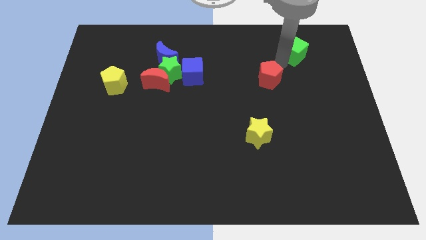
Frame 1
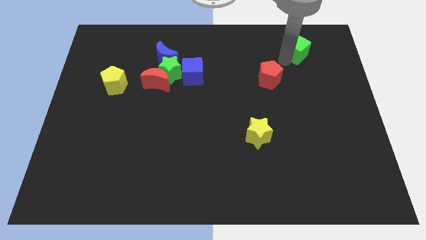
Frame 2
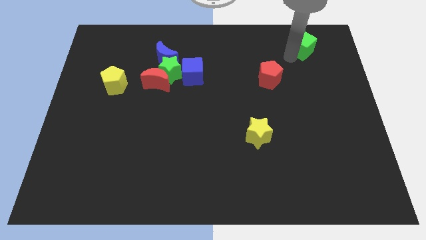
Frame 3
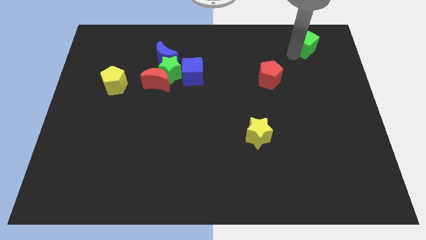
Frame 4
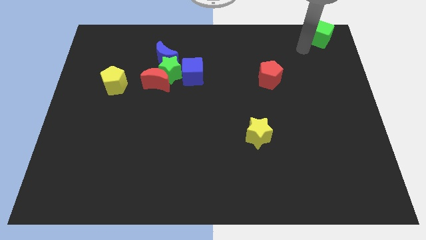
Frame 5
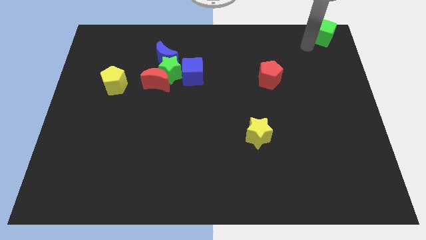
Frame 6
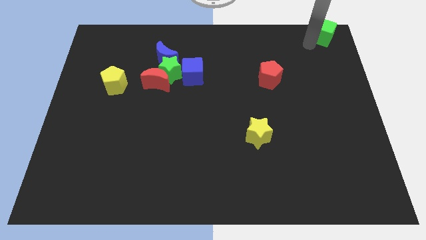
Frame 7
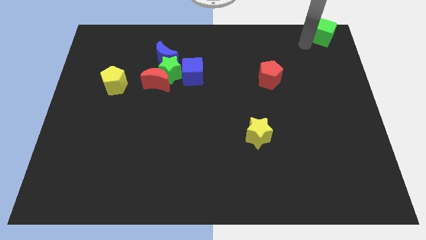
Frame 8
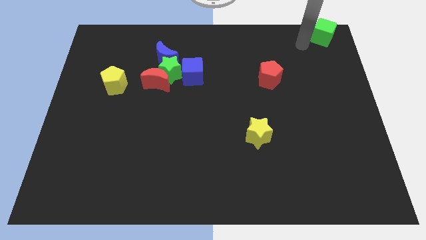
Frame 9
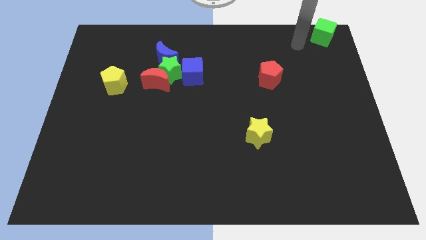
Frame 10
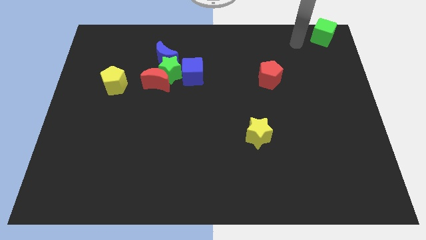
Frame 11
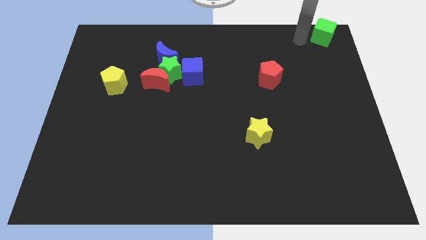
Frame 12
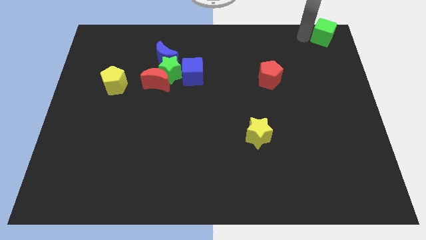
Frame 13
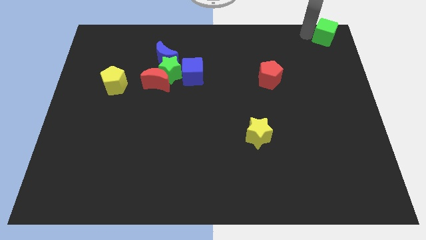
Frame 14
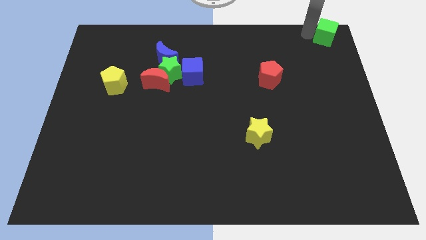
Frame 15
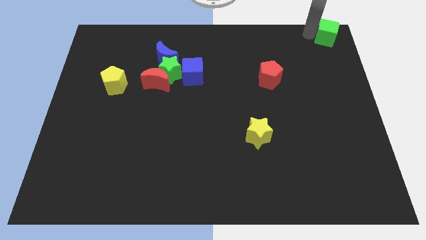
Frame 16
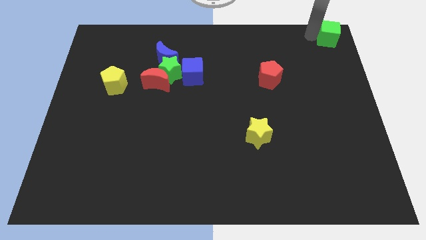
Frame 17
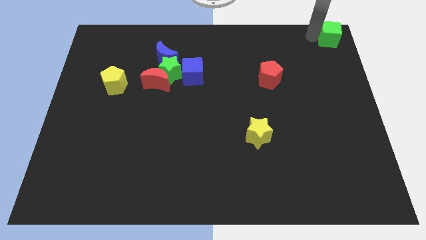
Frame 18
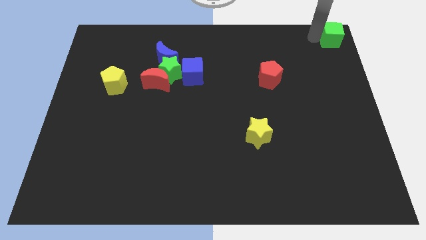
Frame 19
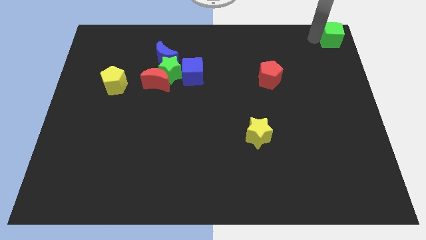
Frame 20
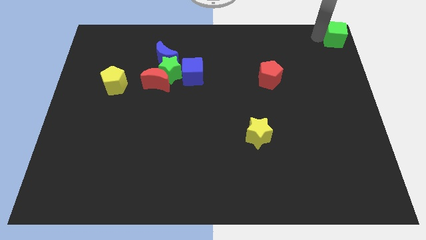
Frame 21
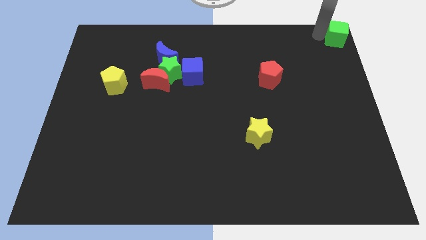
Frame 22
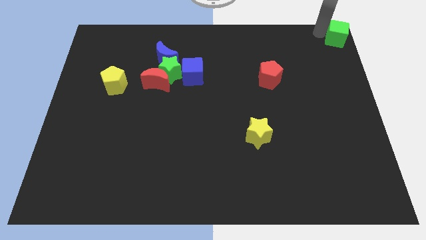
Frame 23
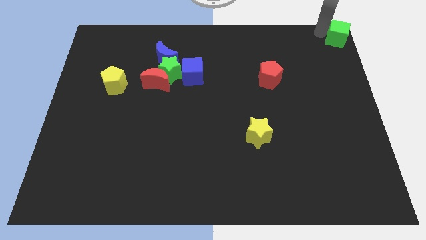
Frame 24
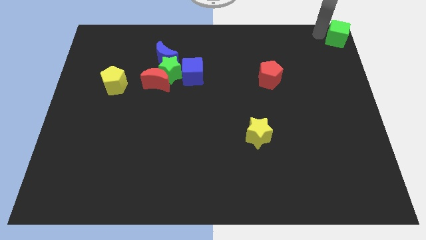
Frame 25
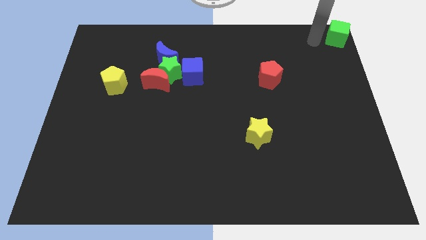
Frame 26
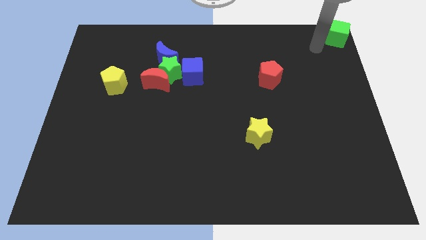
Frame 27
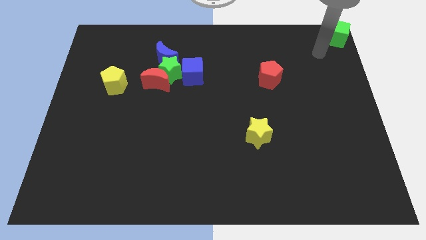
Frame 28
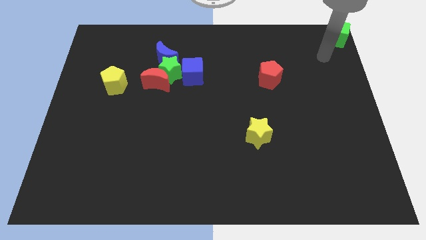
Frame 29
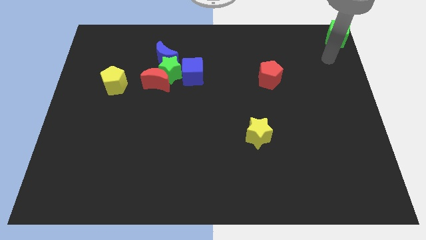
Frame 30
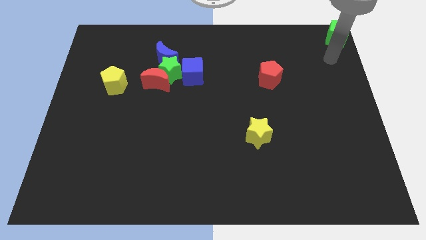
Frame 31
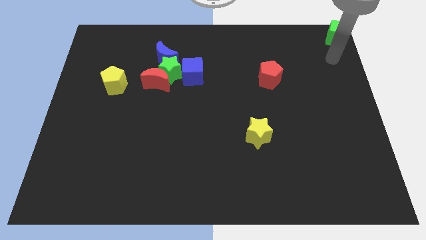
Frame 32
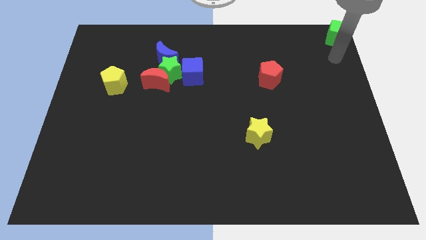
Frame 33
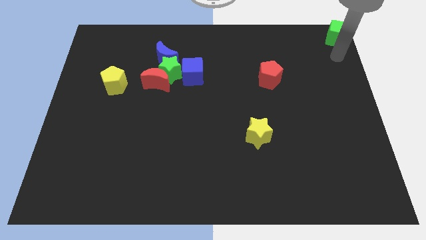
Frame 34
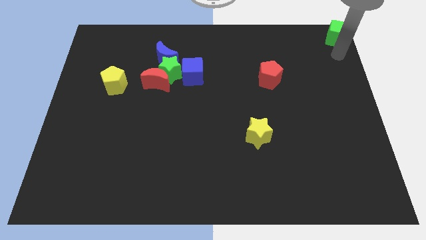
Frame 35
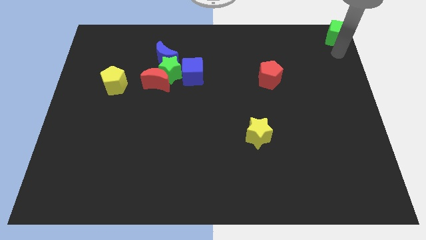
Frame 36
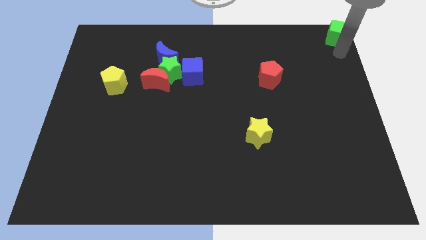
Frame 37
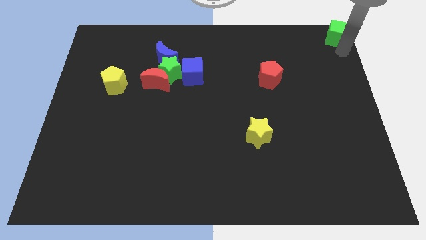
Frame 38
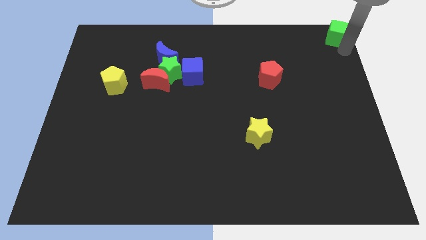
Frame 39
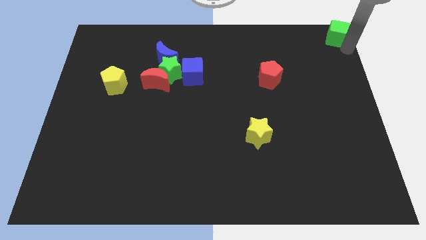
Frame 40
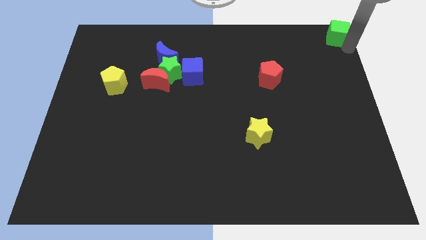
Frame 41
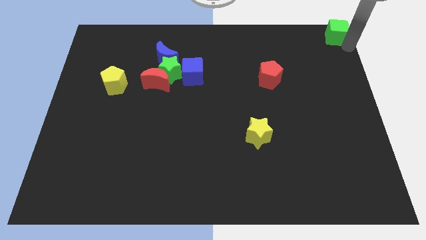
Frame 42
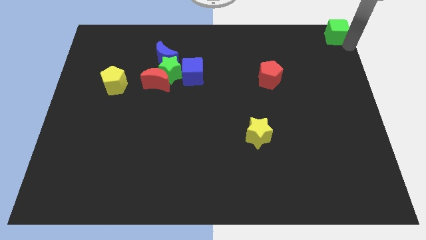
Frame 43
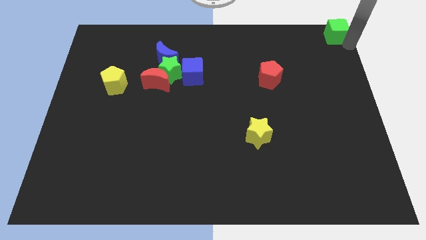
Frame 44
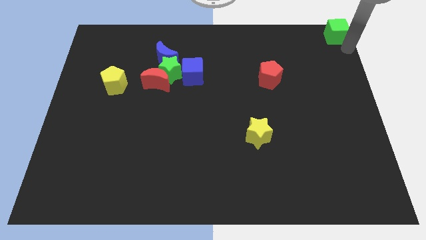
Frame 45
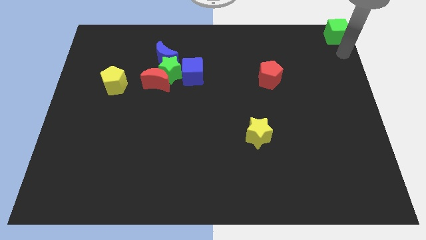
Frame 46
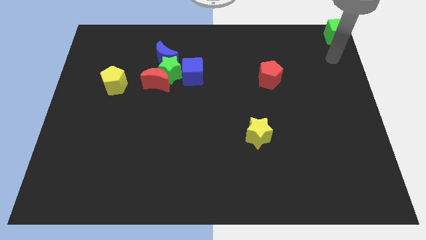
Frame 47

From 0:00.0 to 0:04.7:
place the green cube at the top right corner of the board

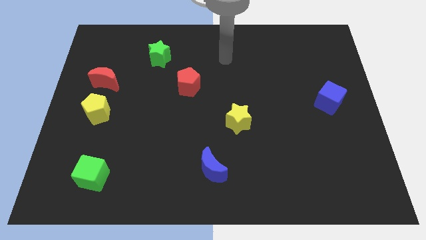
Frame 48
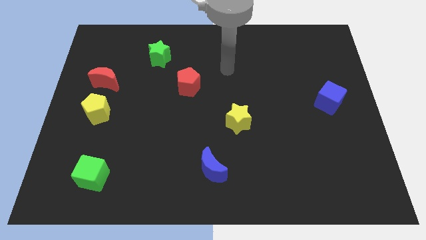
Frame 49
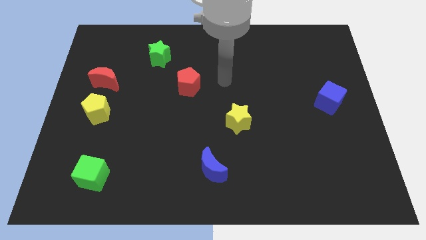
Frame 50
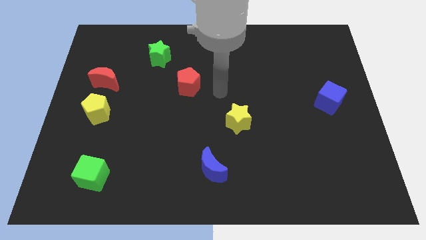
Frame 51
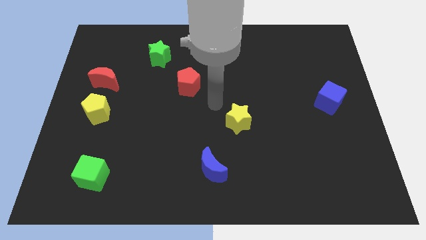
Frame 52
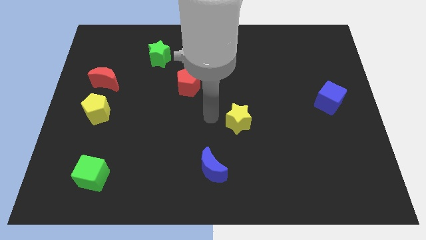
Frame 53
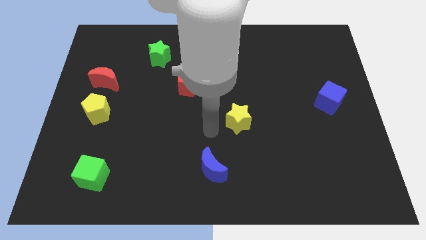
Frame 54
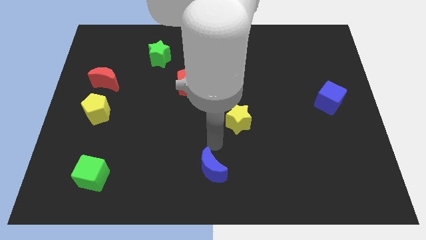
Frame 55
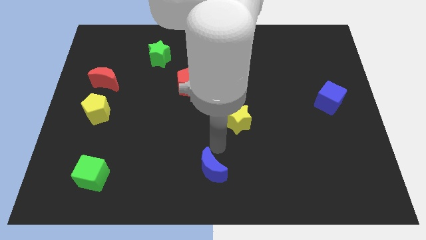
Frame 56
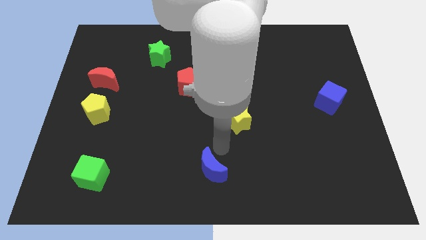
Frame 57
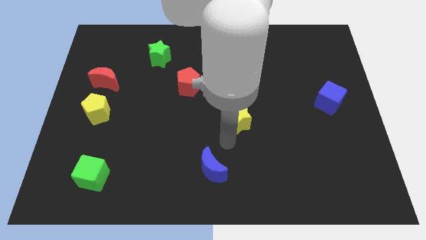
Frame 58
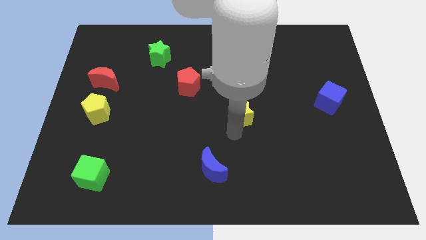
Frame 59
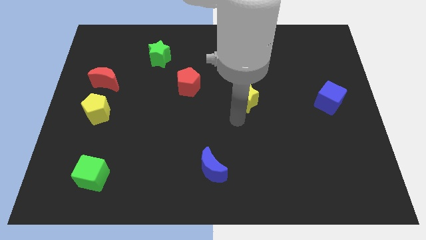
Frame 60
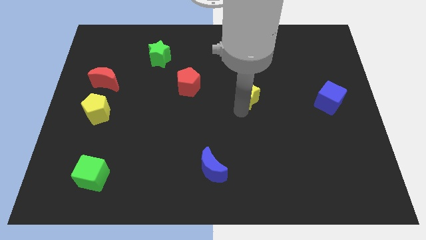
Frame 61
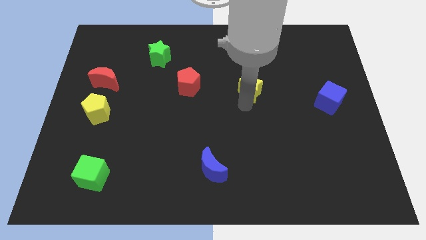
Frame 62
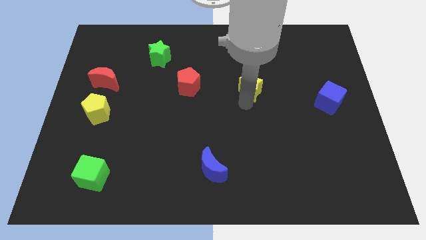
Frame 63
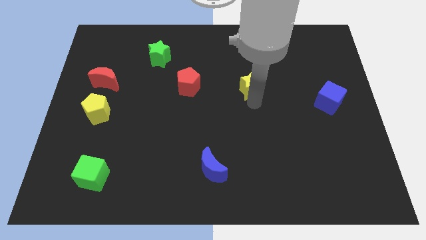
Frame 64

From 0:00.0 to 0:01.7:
move yellow star to the left of blue cube

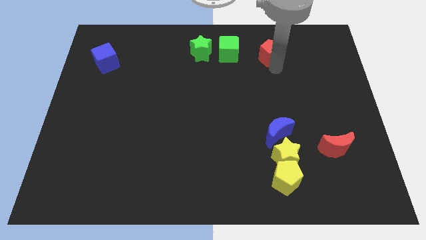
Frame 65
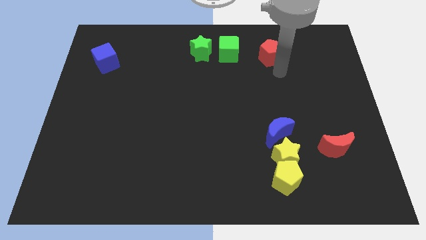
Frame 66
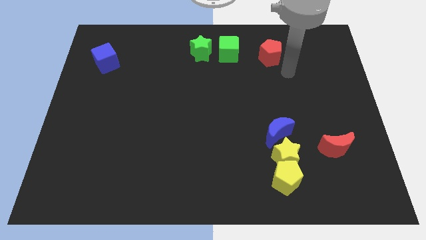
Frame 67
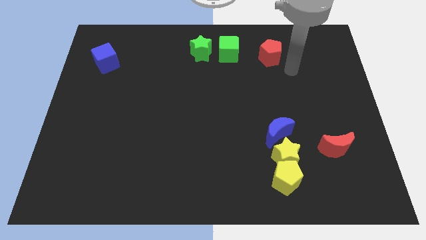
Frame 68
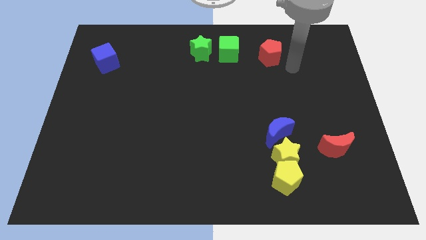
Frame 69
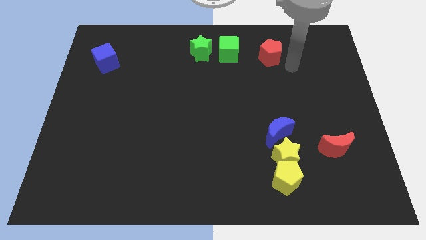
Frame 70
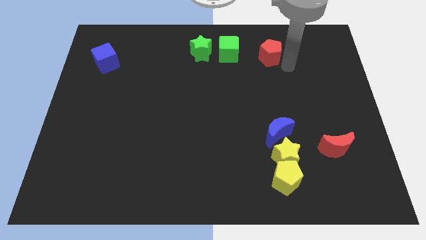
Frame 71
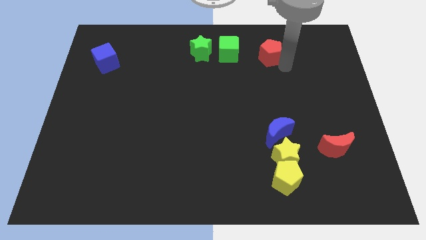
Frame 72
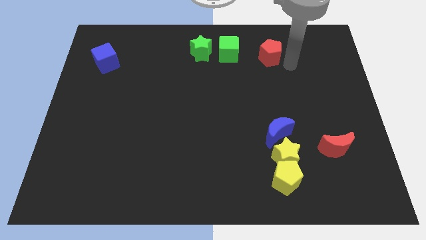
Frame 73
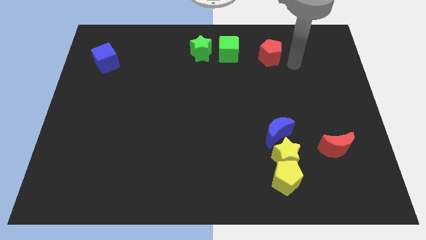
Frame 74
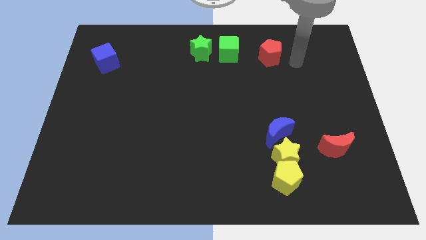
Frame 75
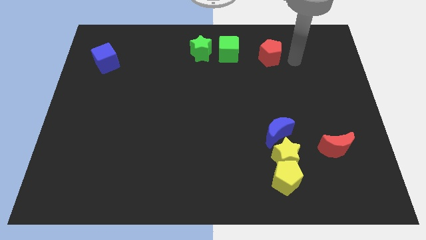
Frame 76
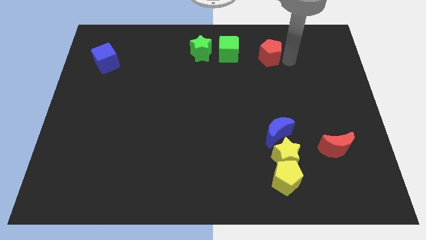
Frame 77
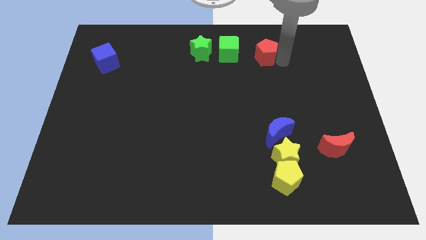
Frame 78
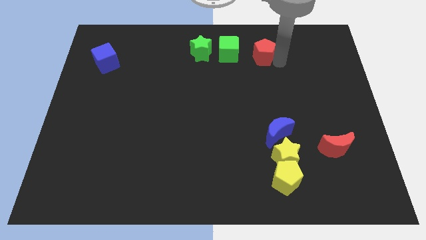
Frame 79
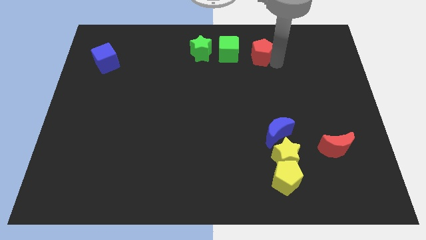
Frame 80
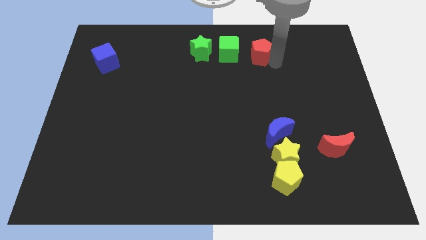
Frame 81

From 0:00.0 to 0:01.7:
place red pentagon towards the green cube

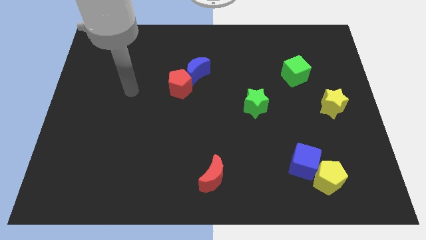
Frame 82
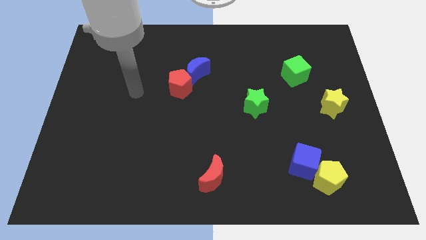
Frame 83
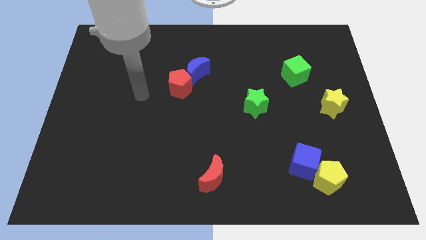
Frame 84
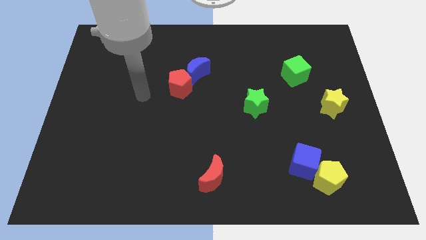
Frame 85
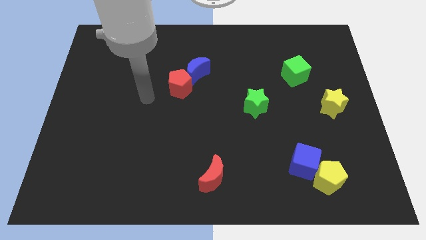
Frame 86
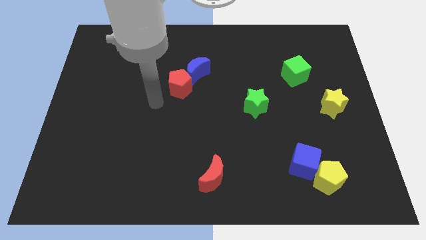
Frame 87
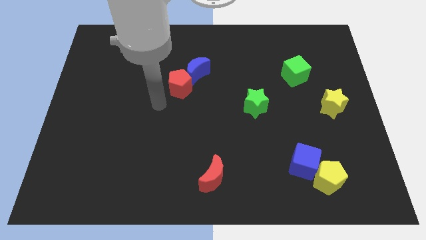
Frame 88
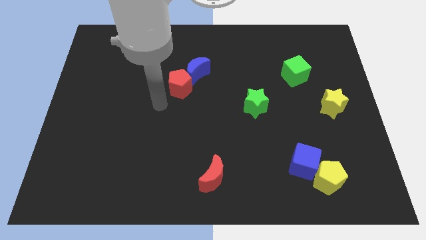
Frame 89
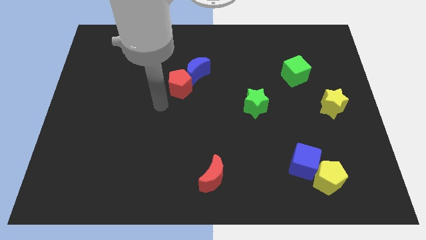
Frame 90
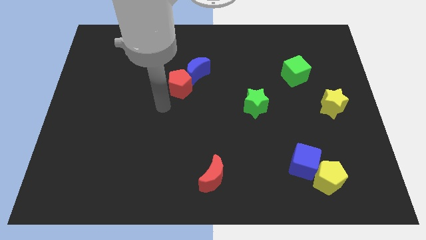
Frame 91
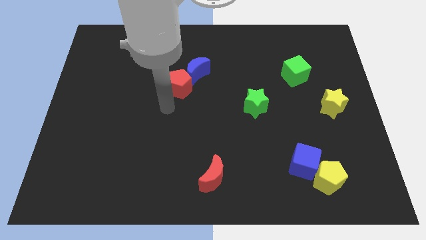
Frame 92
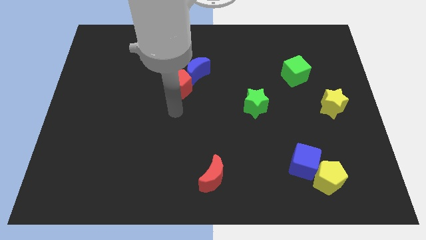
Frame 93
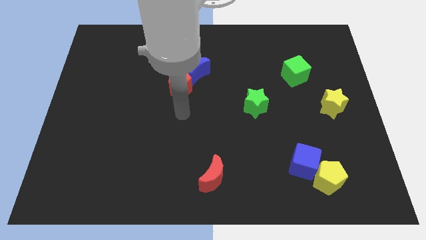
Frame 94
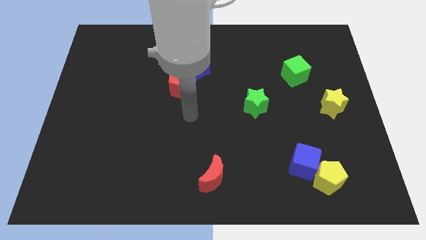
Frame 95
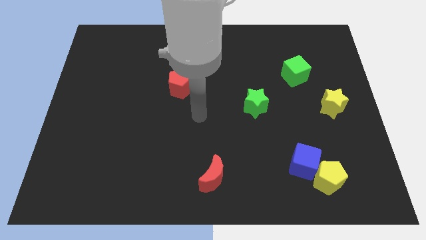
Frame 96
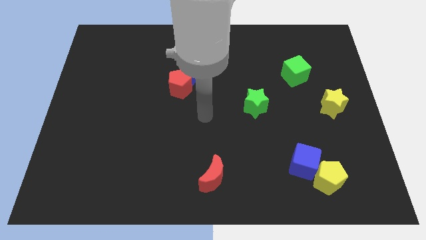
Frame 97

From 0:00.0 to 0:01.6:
move your arm to the center of the board
